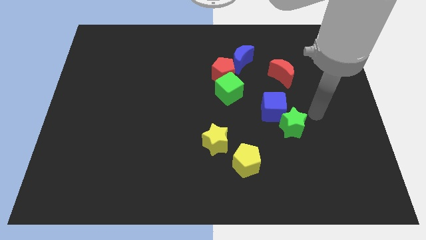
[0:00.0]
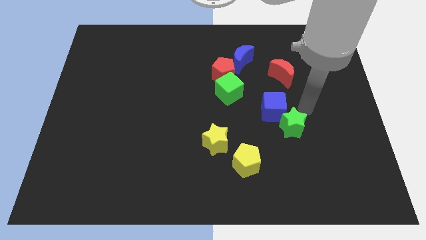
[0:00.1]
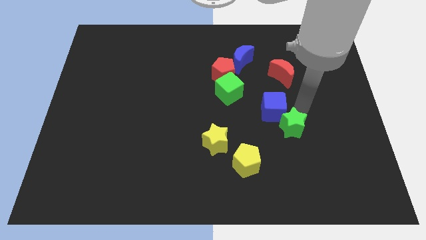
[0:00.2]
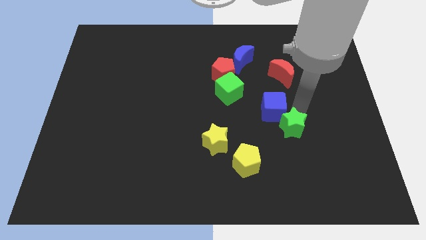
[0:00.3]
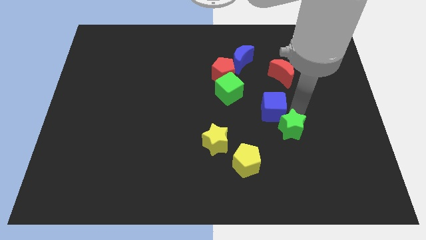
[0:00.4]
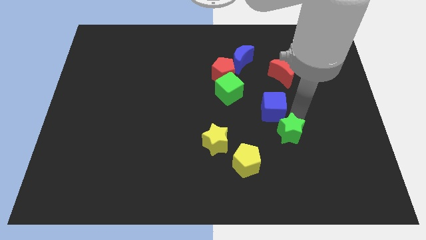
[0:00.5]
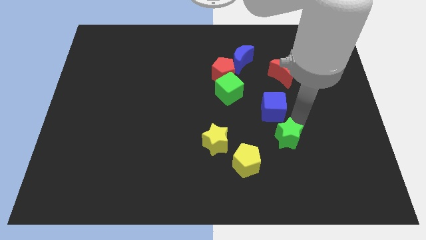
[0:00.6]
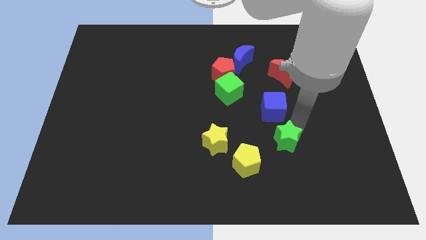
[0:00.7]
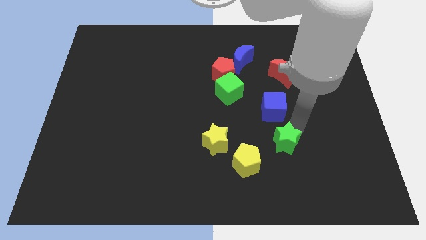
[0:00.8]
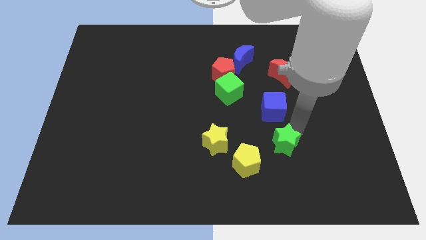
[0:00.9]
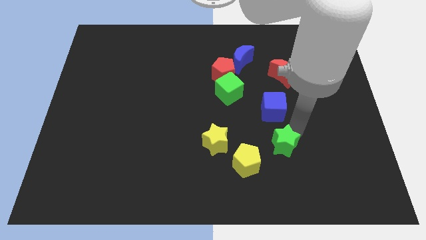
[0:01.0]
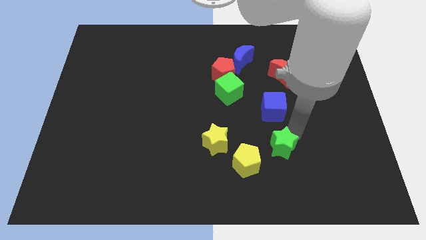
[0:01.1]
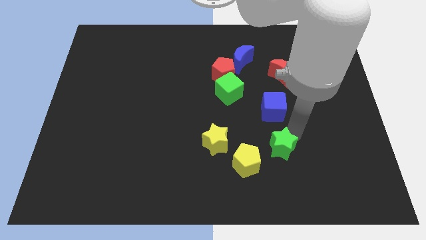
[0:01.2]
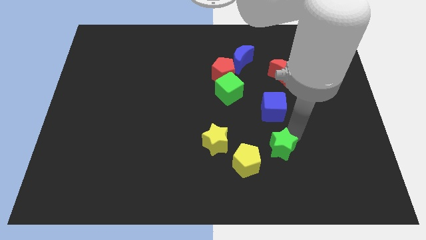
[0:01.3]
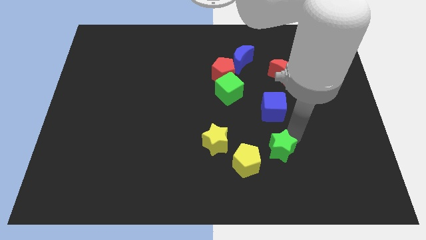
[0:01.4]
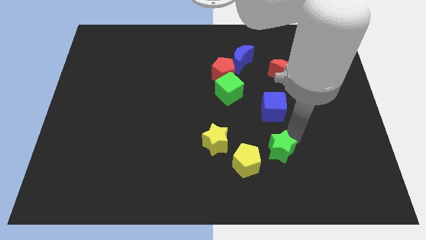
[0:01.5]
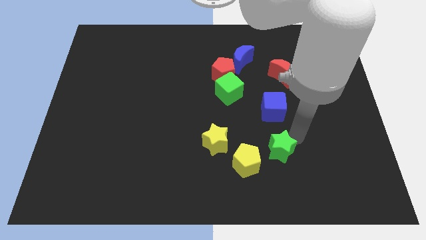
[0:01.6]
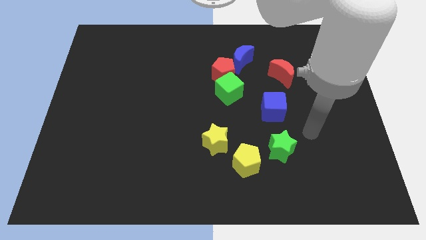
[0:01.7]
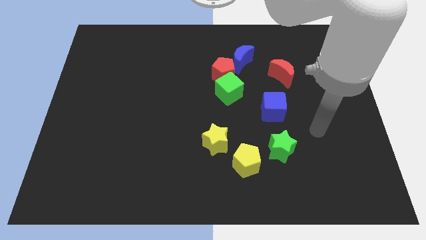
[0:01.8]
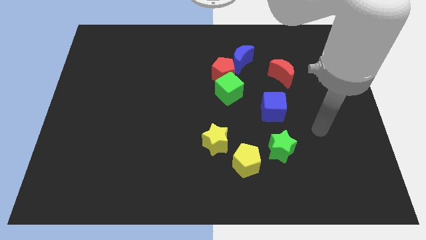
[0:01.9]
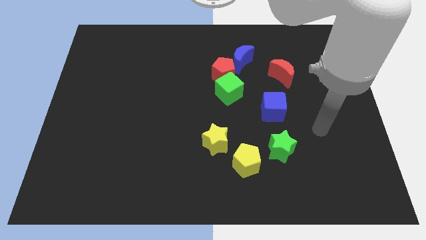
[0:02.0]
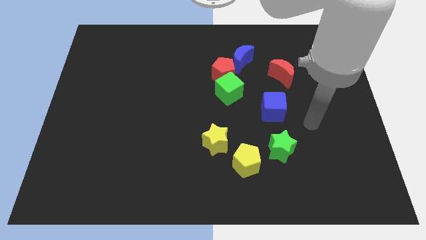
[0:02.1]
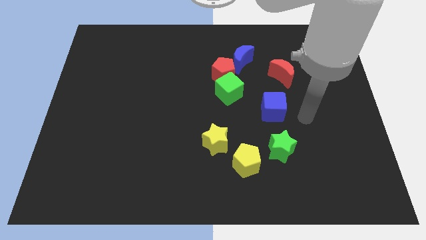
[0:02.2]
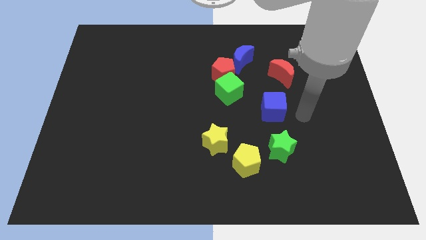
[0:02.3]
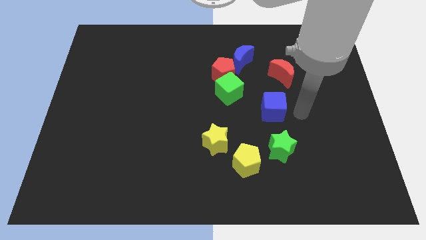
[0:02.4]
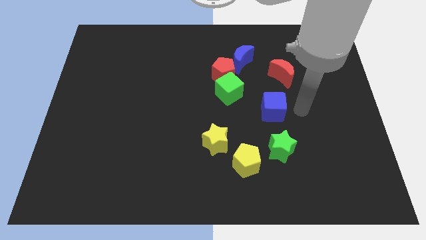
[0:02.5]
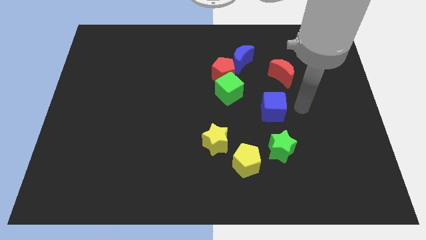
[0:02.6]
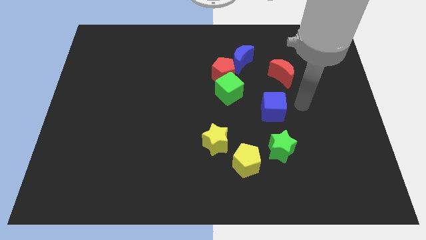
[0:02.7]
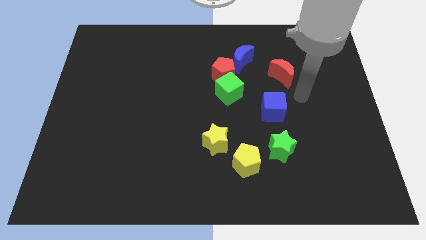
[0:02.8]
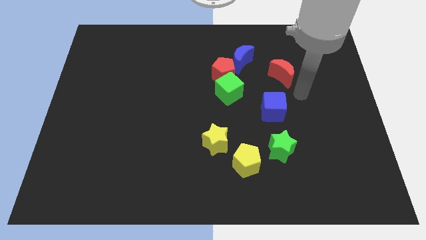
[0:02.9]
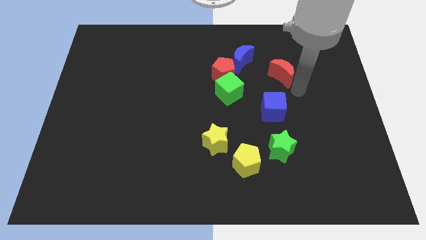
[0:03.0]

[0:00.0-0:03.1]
push the green star slightly to the bottom

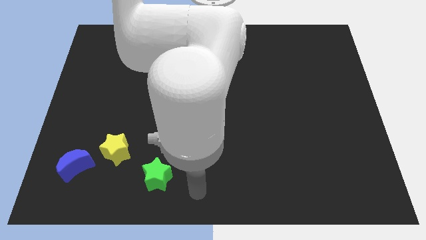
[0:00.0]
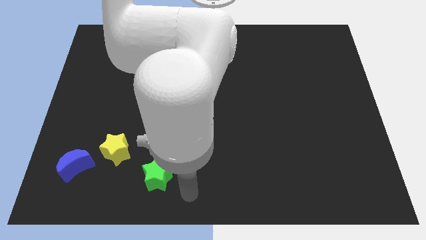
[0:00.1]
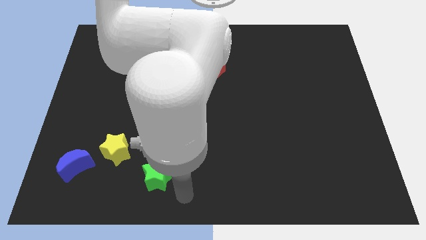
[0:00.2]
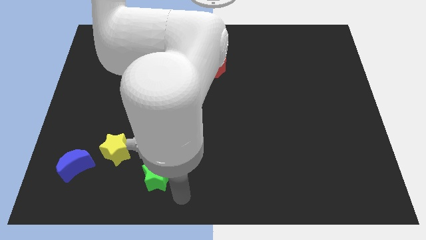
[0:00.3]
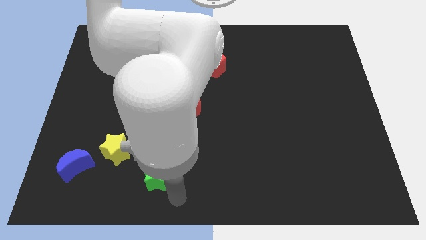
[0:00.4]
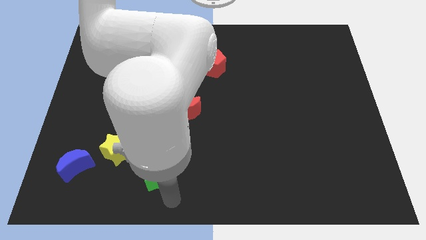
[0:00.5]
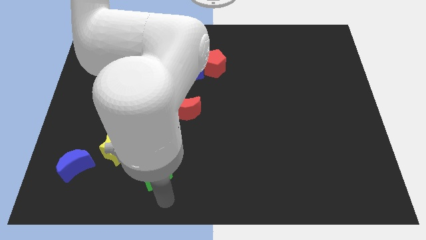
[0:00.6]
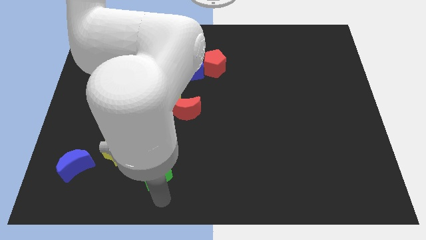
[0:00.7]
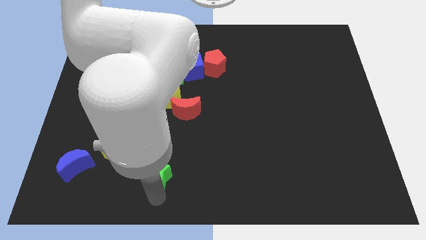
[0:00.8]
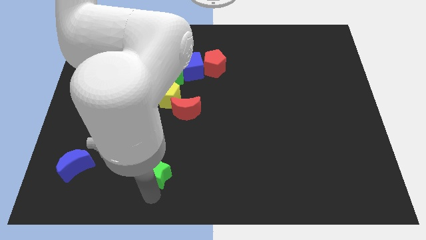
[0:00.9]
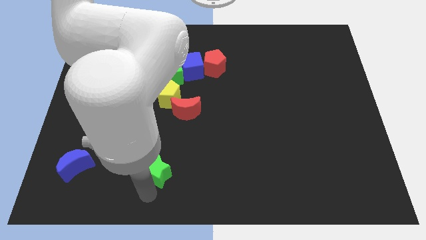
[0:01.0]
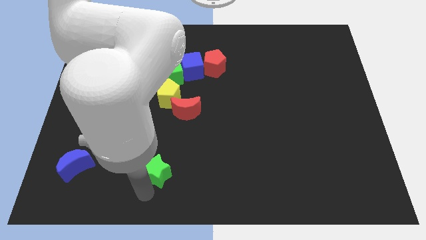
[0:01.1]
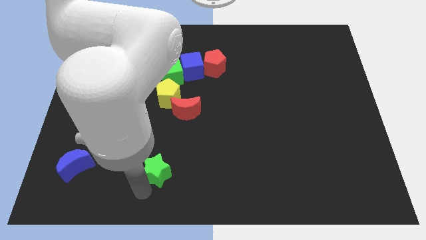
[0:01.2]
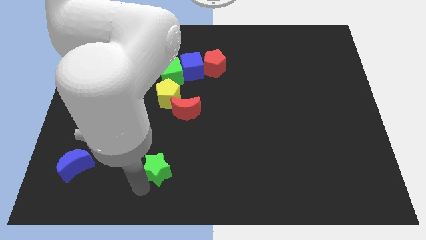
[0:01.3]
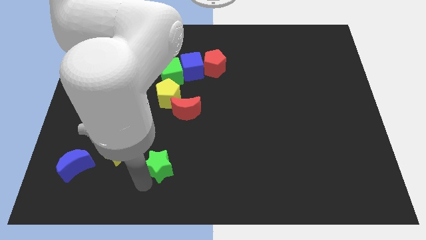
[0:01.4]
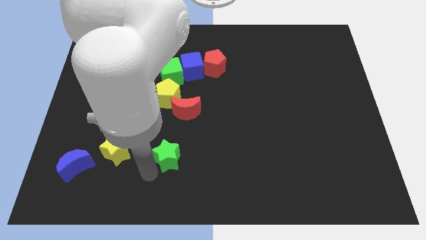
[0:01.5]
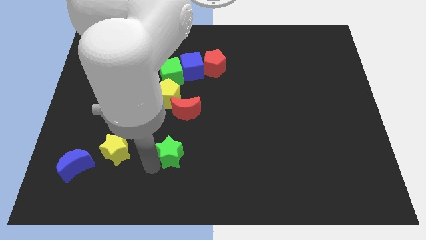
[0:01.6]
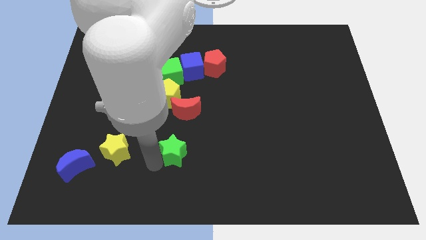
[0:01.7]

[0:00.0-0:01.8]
put the green star parallel right to the yellow star

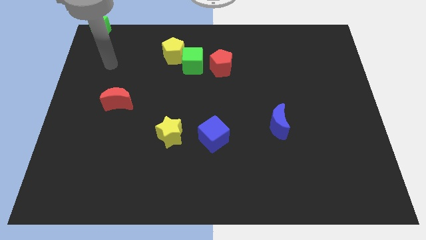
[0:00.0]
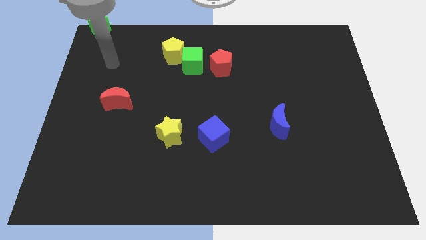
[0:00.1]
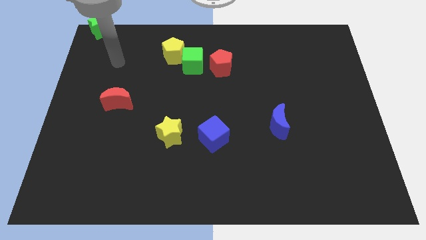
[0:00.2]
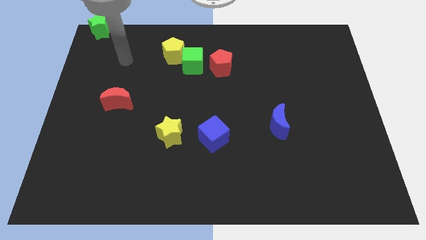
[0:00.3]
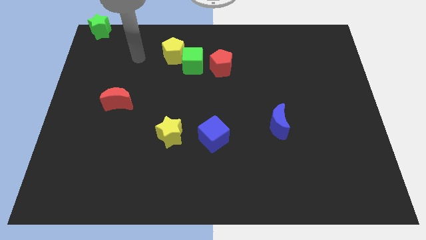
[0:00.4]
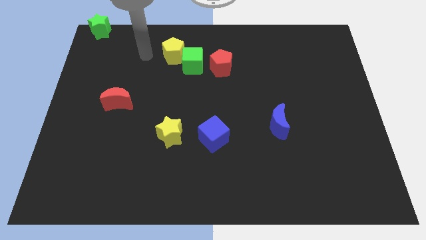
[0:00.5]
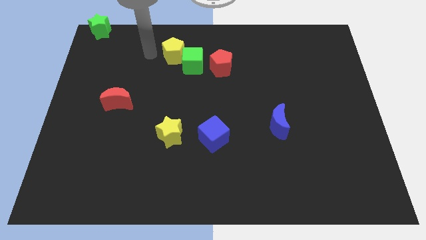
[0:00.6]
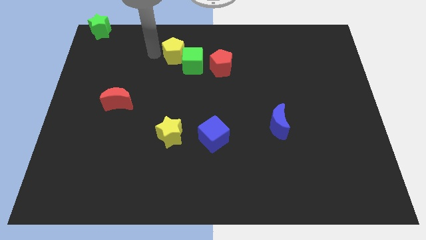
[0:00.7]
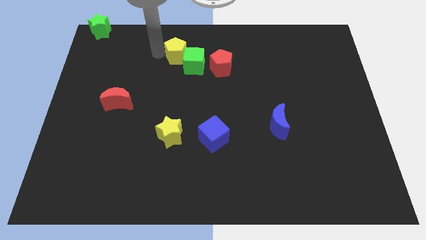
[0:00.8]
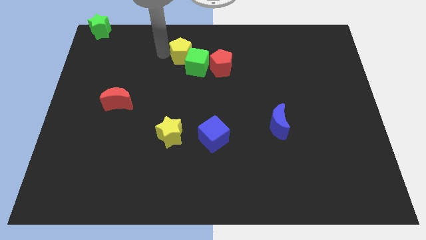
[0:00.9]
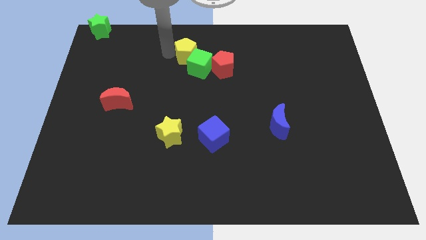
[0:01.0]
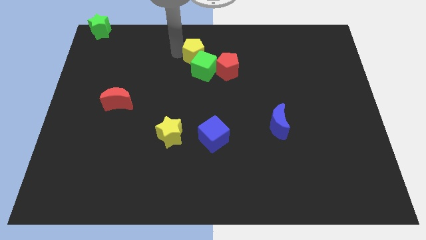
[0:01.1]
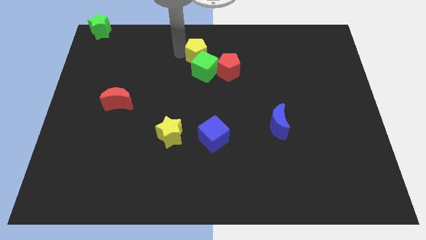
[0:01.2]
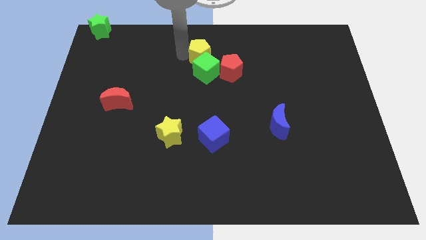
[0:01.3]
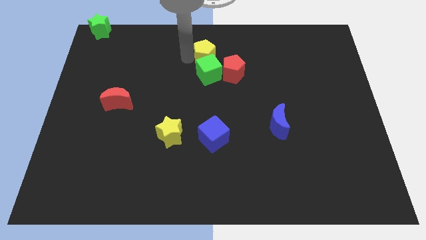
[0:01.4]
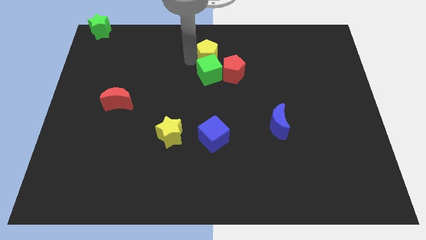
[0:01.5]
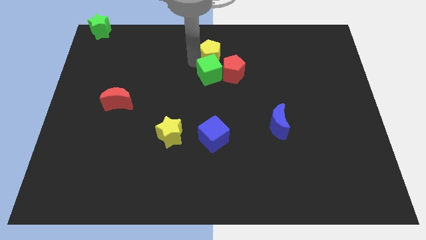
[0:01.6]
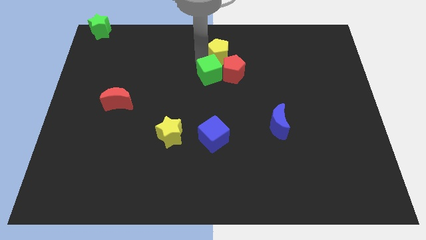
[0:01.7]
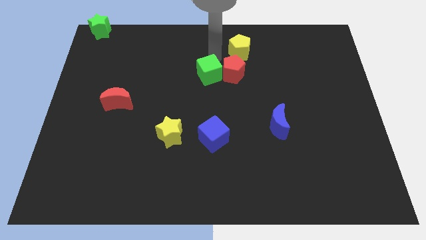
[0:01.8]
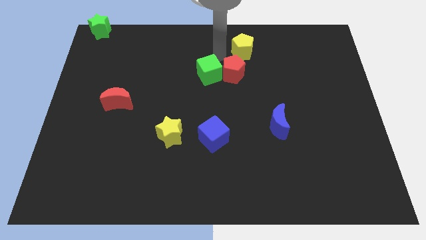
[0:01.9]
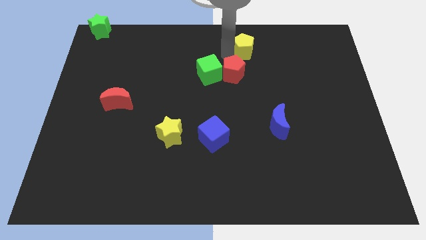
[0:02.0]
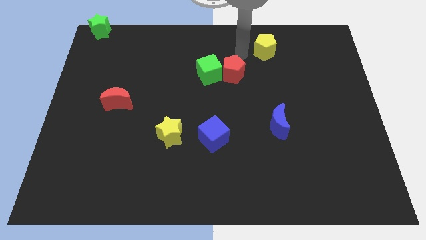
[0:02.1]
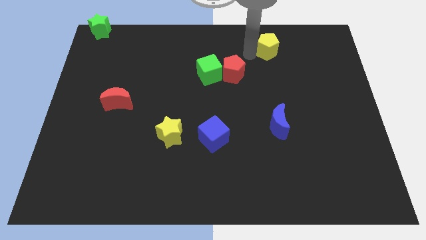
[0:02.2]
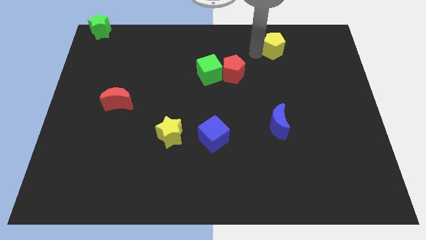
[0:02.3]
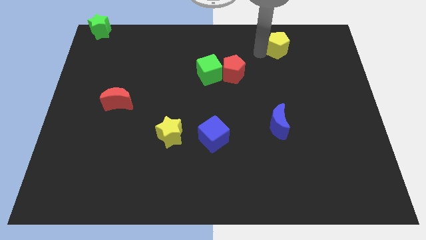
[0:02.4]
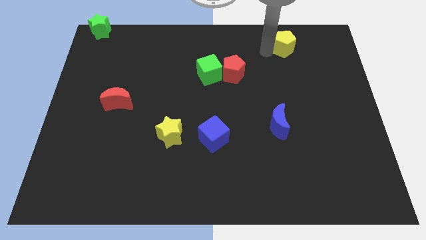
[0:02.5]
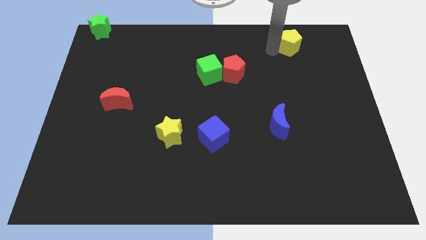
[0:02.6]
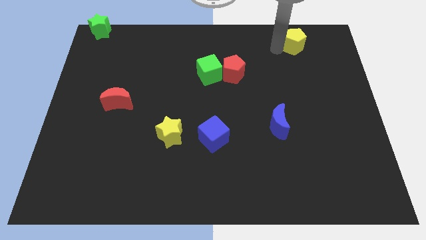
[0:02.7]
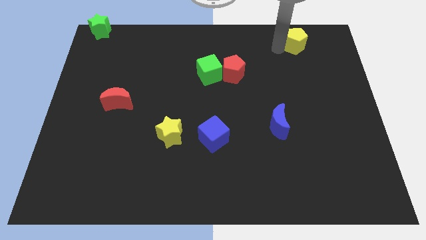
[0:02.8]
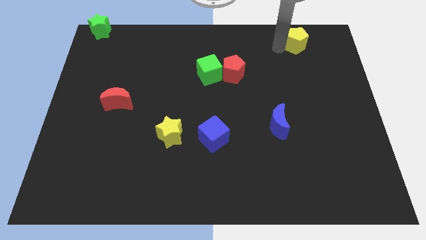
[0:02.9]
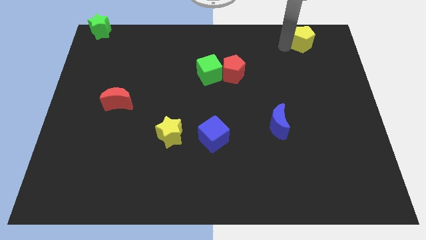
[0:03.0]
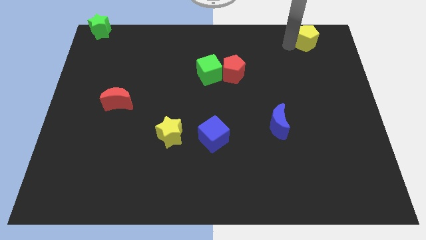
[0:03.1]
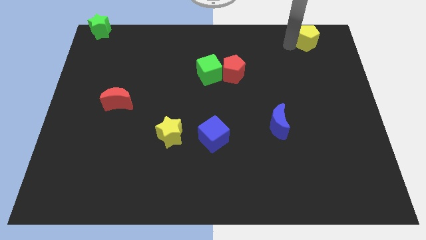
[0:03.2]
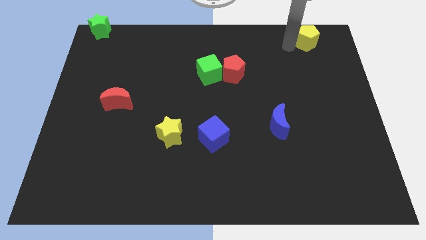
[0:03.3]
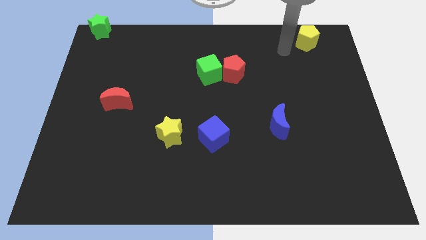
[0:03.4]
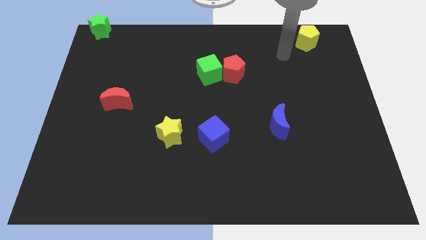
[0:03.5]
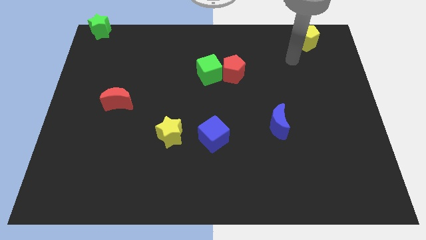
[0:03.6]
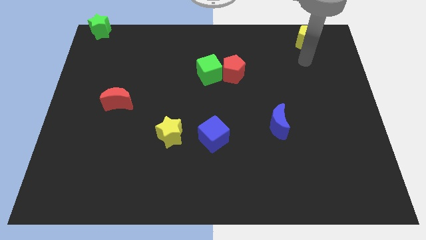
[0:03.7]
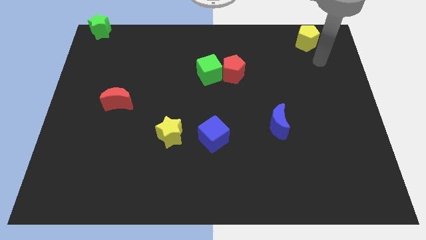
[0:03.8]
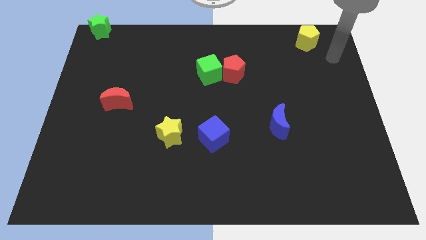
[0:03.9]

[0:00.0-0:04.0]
push the yellow pentagon towards right side of the board

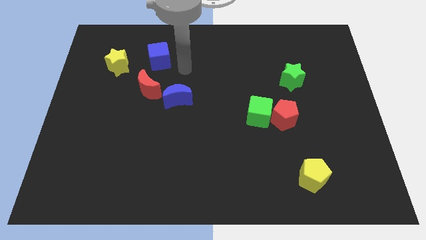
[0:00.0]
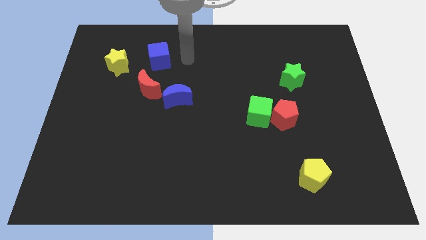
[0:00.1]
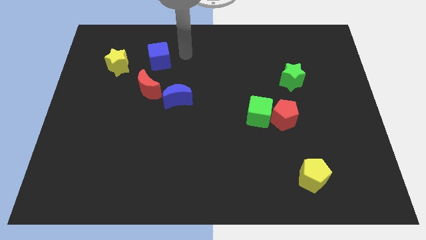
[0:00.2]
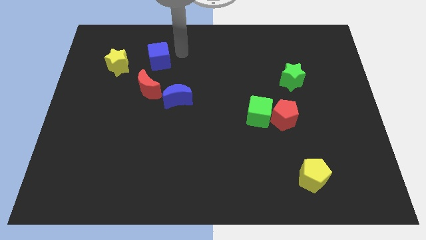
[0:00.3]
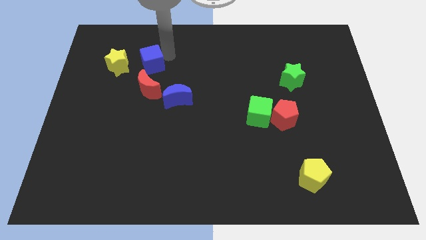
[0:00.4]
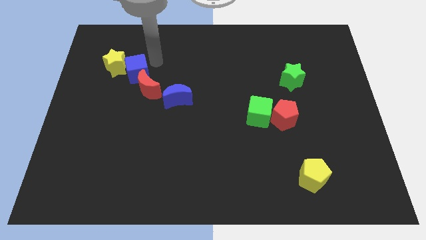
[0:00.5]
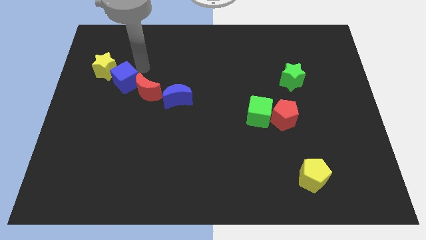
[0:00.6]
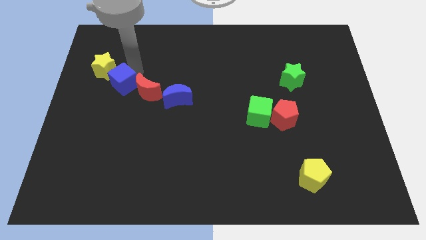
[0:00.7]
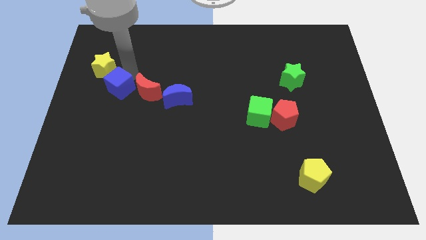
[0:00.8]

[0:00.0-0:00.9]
place the blue cube in between the red moon and yellow star
